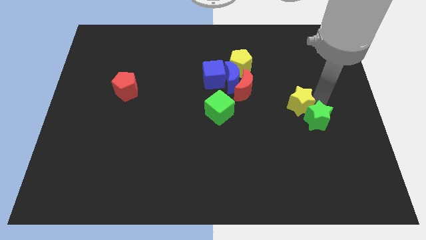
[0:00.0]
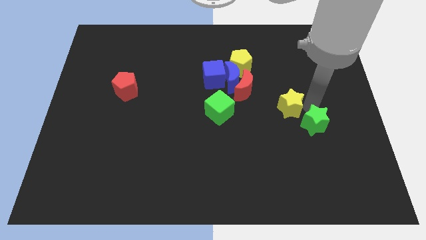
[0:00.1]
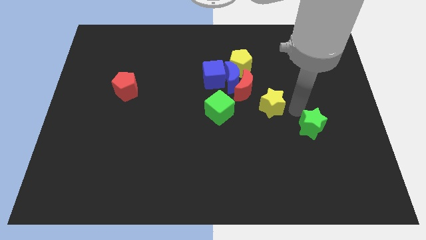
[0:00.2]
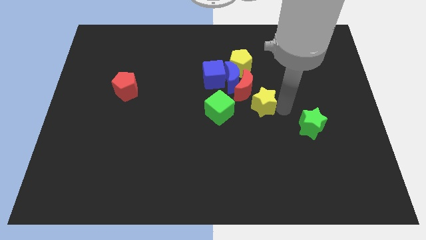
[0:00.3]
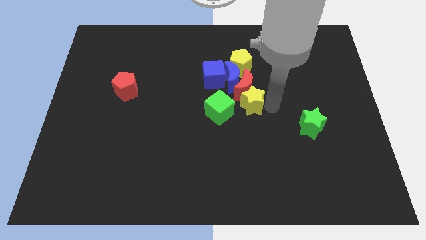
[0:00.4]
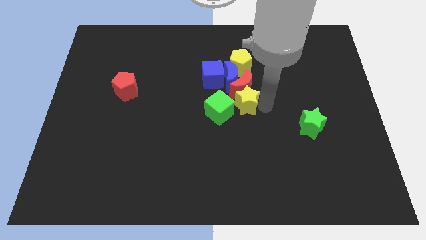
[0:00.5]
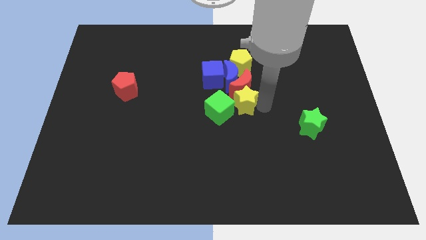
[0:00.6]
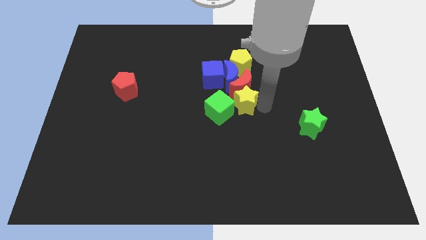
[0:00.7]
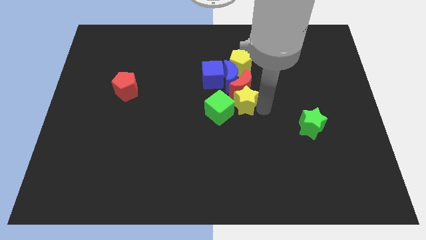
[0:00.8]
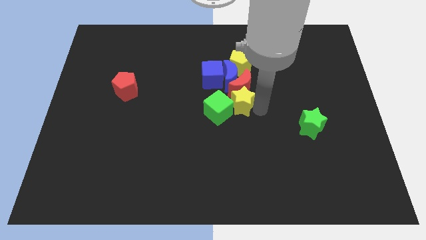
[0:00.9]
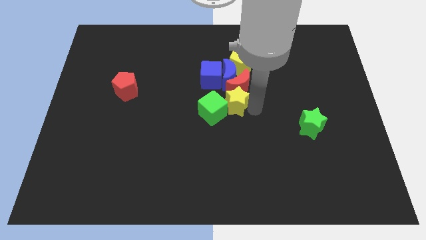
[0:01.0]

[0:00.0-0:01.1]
place yellow right of green block

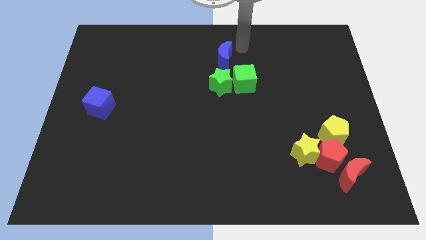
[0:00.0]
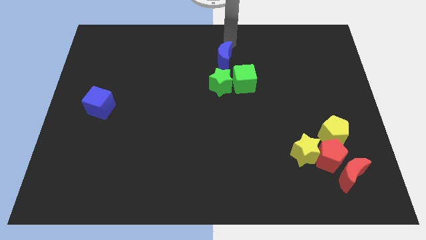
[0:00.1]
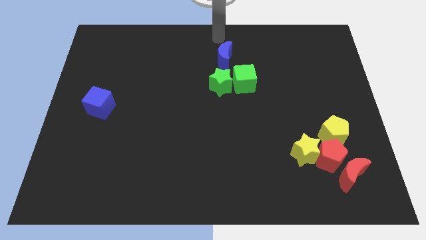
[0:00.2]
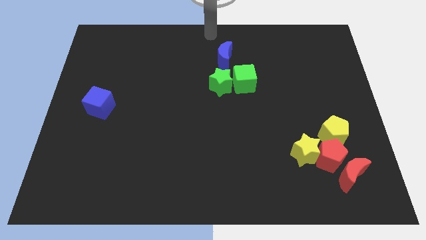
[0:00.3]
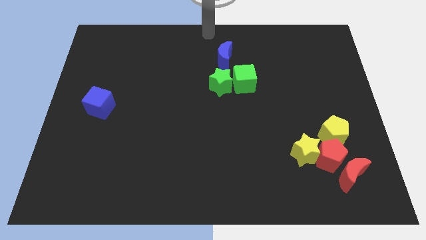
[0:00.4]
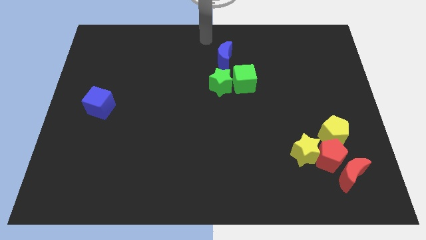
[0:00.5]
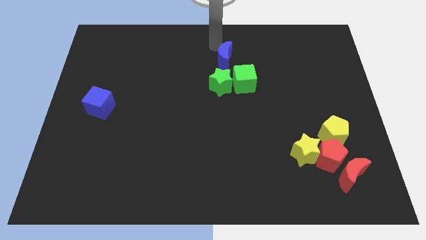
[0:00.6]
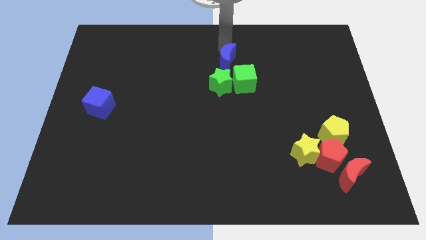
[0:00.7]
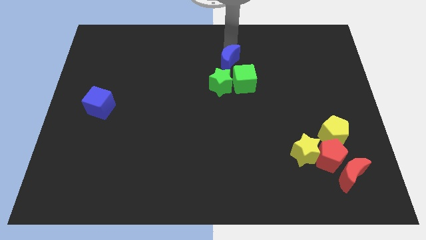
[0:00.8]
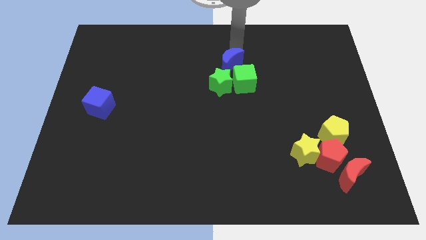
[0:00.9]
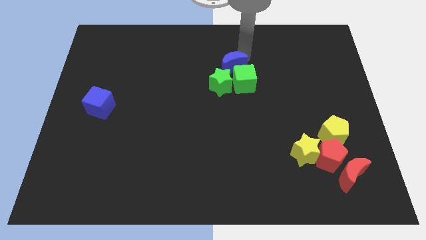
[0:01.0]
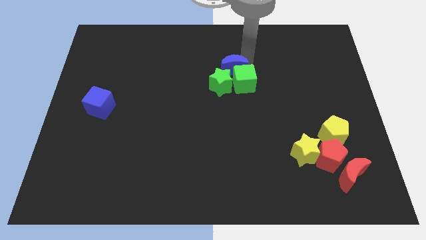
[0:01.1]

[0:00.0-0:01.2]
put the blue crescent vertically above the green blocks

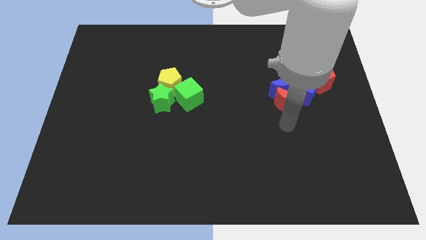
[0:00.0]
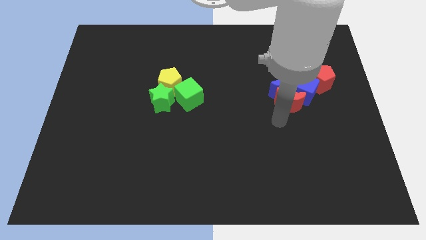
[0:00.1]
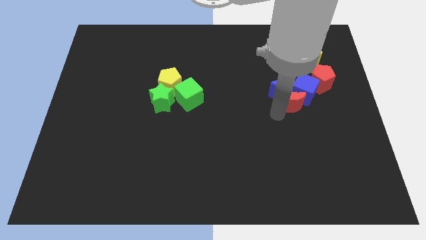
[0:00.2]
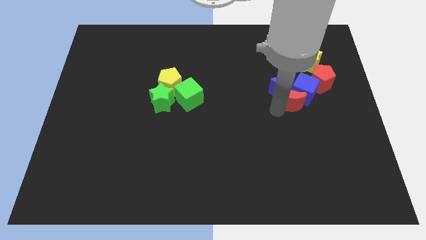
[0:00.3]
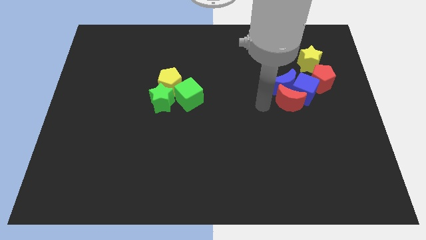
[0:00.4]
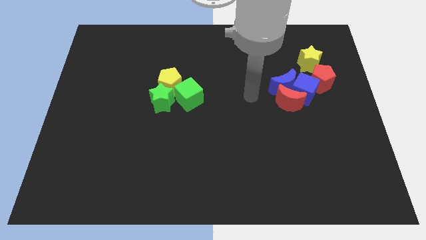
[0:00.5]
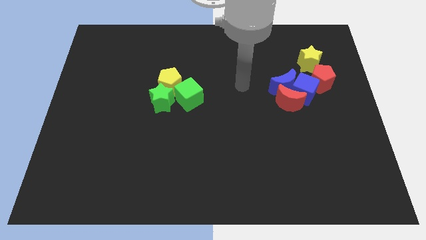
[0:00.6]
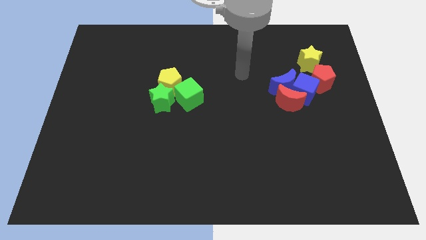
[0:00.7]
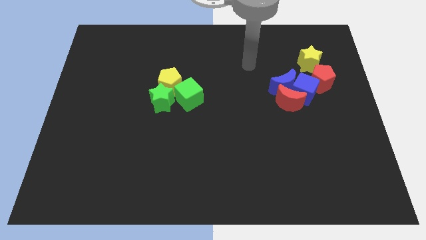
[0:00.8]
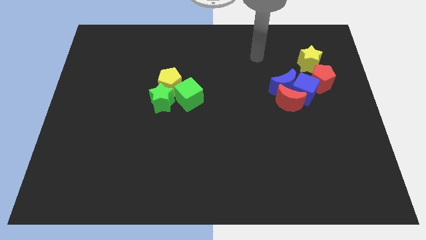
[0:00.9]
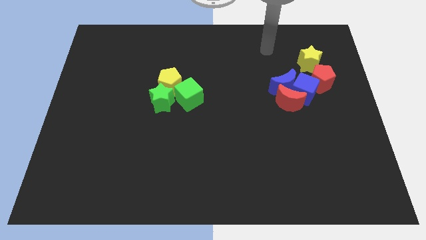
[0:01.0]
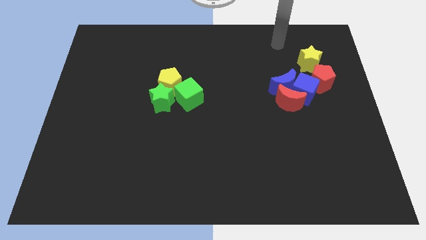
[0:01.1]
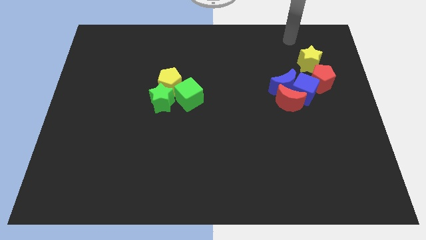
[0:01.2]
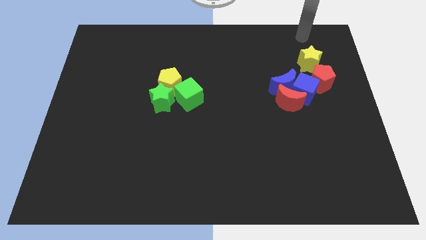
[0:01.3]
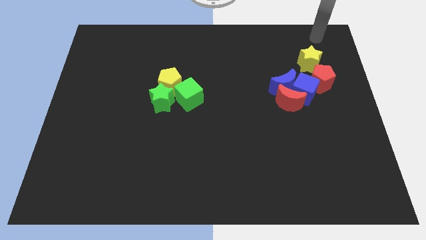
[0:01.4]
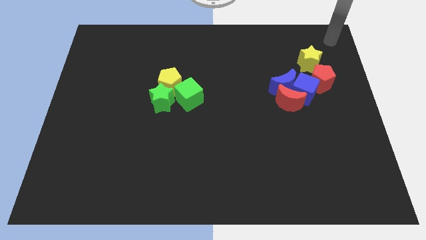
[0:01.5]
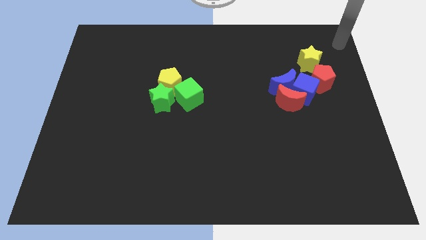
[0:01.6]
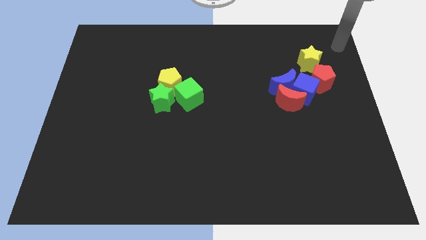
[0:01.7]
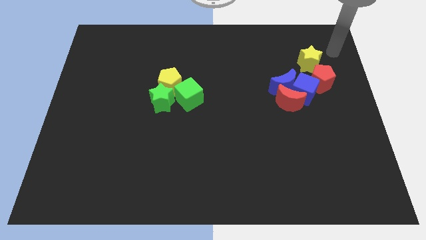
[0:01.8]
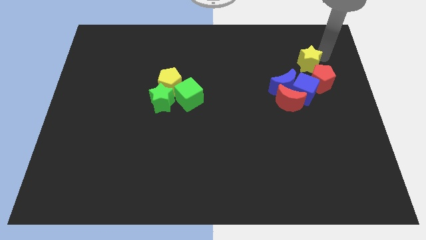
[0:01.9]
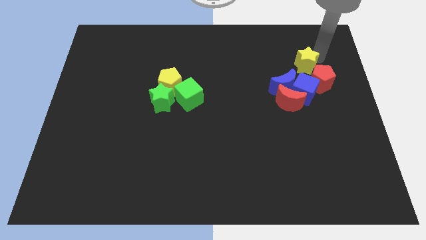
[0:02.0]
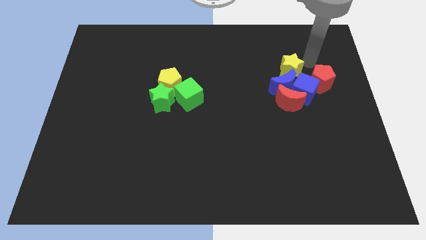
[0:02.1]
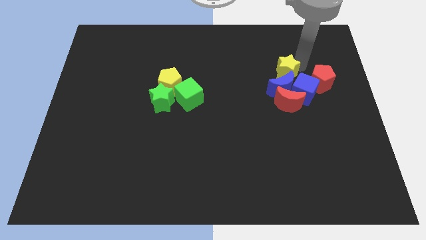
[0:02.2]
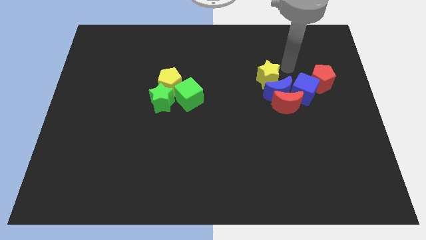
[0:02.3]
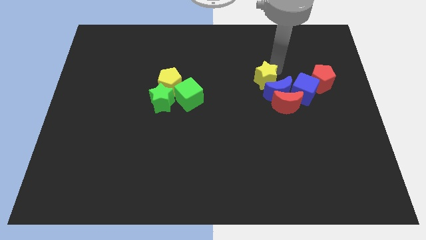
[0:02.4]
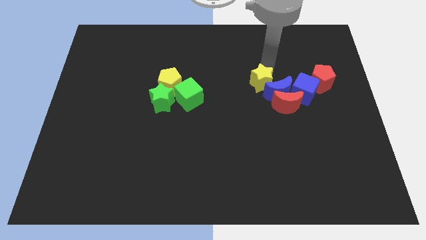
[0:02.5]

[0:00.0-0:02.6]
move the yellow star into the blue crescent

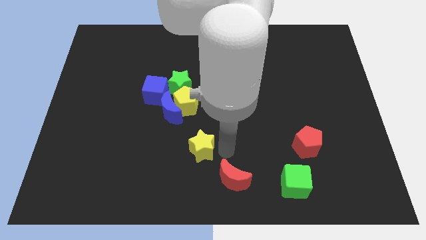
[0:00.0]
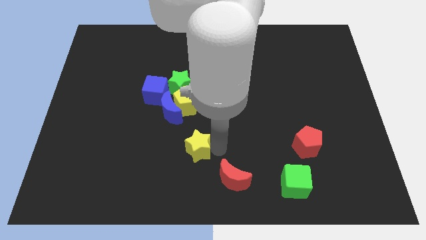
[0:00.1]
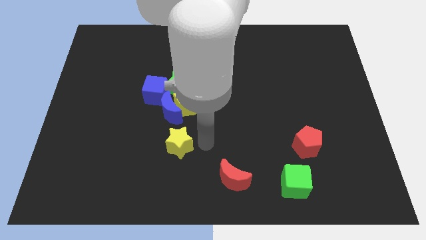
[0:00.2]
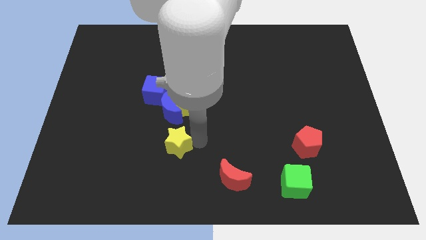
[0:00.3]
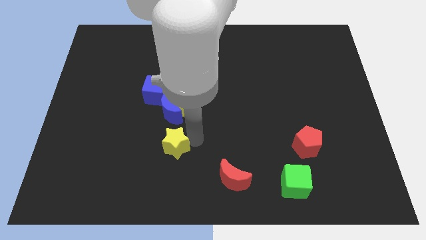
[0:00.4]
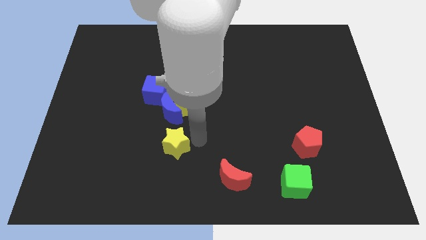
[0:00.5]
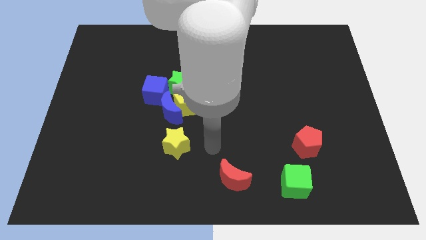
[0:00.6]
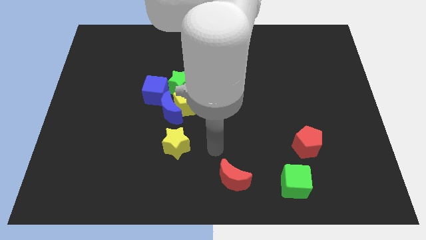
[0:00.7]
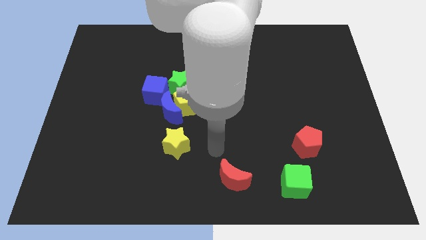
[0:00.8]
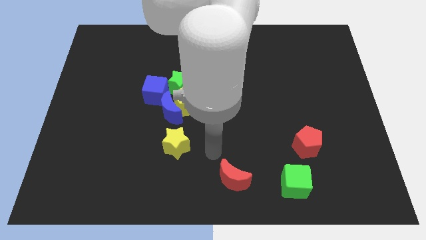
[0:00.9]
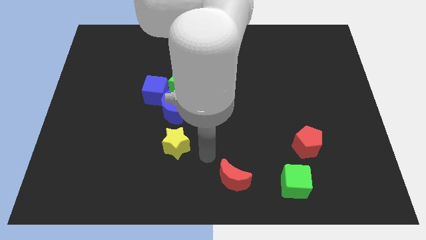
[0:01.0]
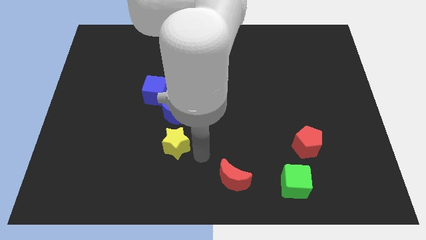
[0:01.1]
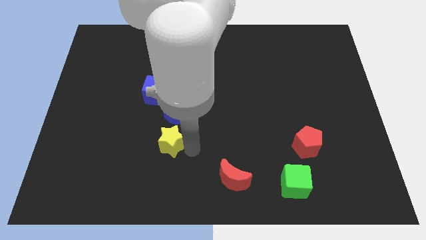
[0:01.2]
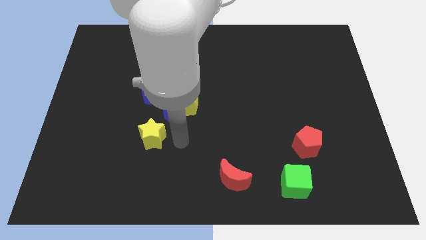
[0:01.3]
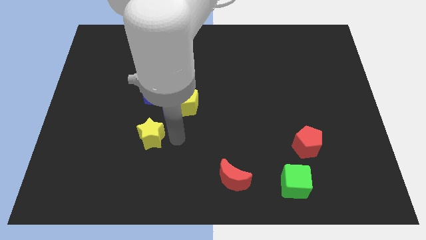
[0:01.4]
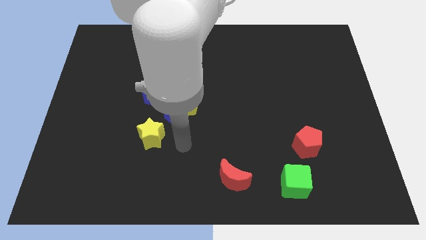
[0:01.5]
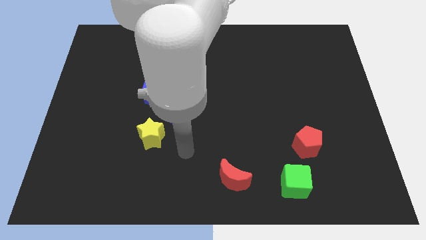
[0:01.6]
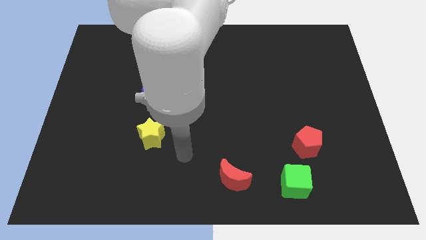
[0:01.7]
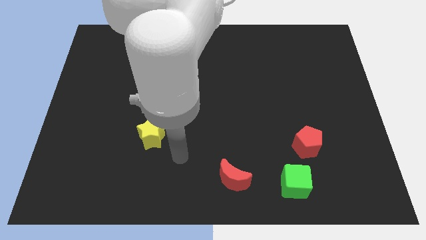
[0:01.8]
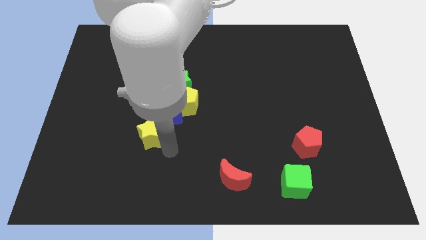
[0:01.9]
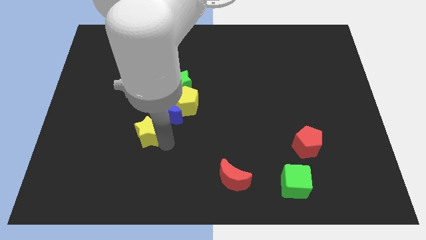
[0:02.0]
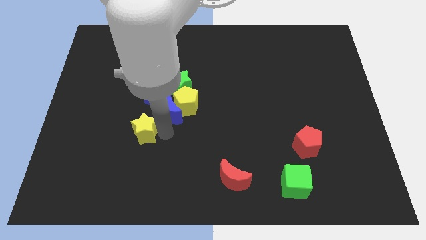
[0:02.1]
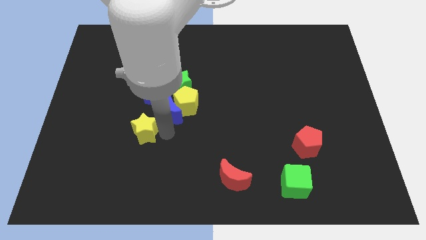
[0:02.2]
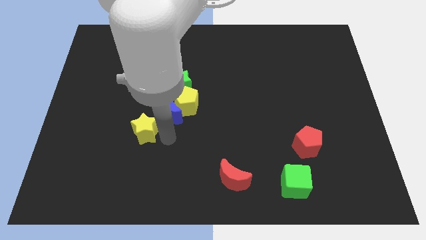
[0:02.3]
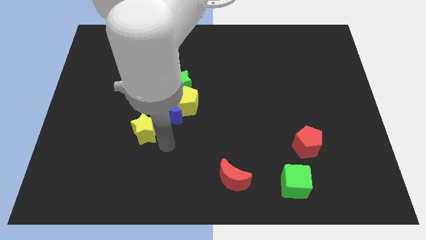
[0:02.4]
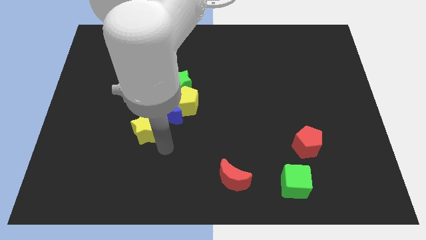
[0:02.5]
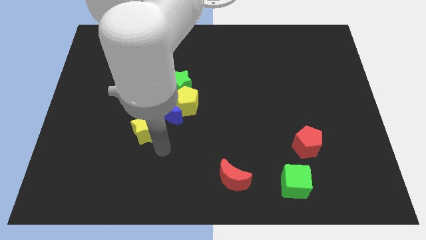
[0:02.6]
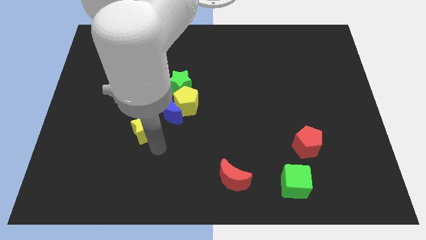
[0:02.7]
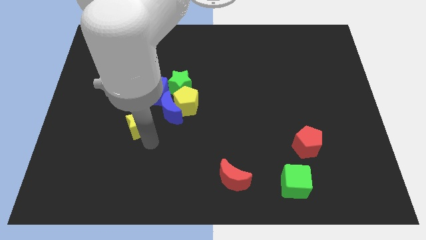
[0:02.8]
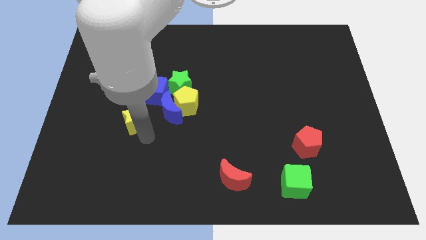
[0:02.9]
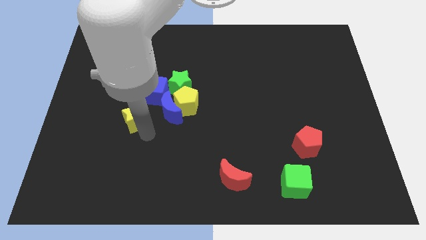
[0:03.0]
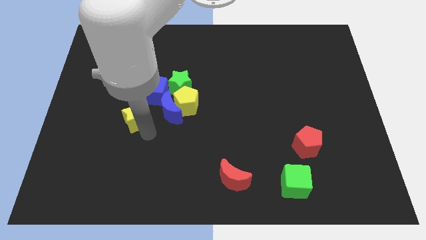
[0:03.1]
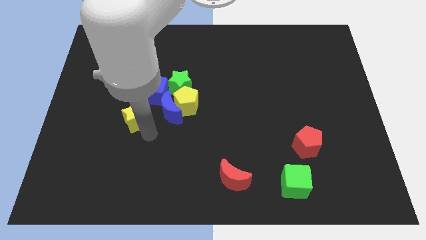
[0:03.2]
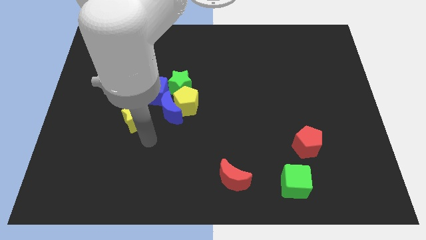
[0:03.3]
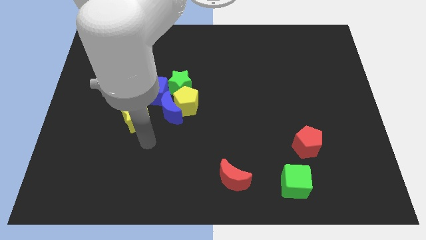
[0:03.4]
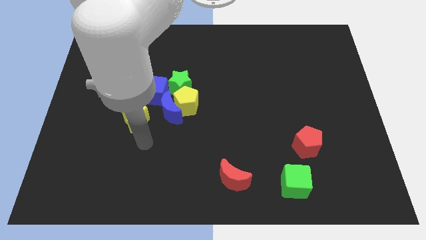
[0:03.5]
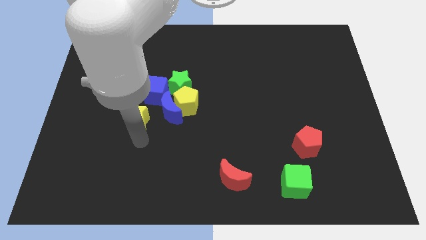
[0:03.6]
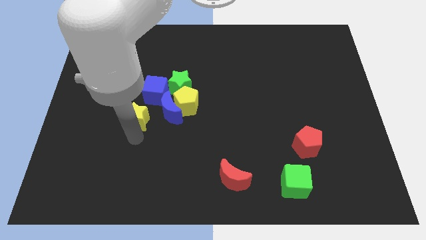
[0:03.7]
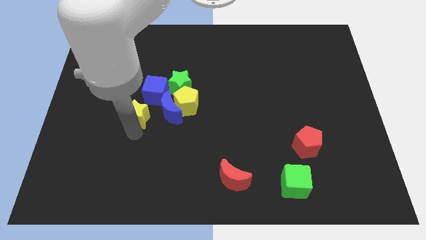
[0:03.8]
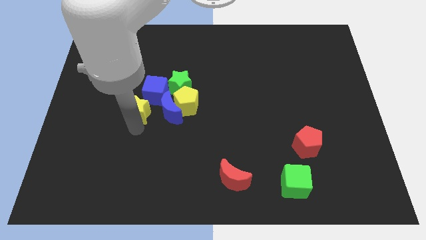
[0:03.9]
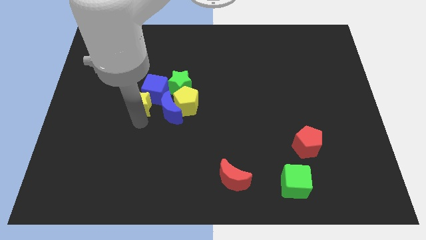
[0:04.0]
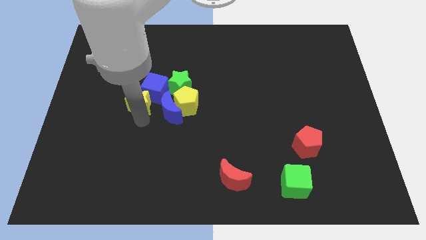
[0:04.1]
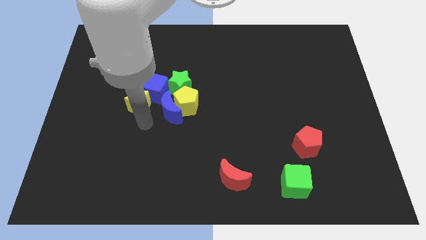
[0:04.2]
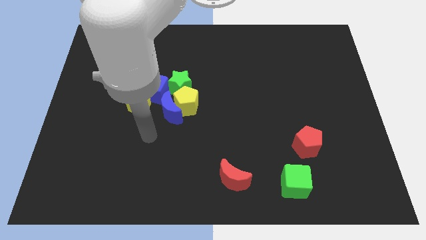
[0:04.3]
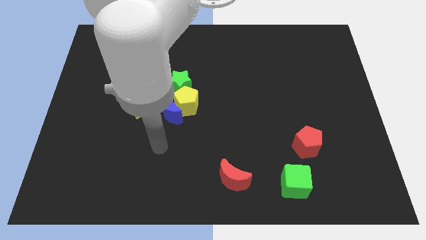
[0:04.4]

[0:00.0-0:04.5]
move the yellow star into the blue cube
